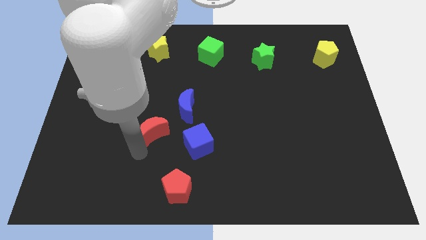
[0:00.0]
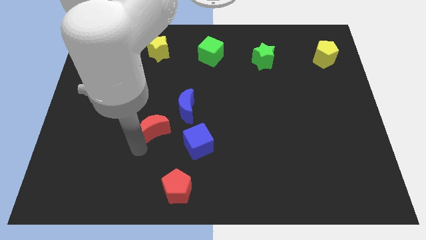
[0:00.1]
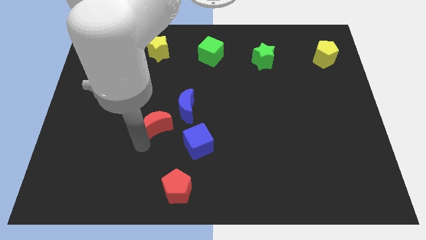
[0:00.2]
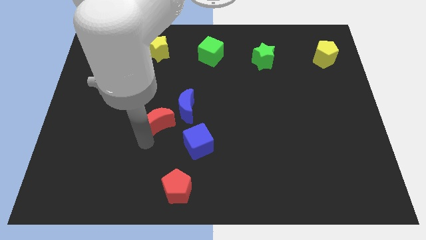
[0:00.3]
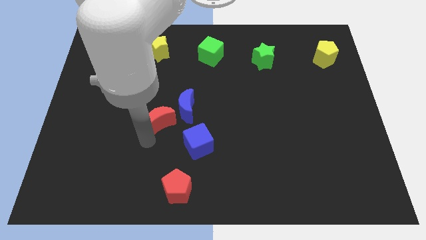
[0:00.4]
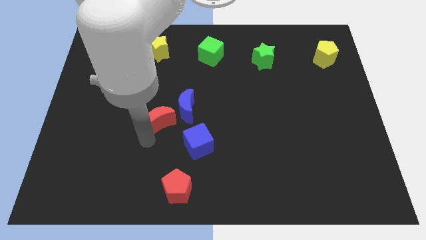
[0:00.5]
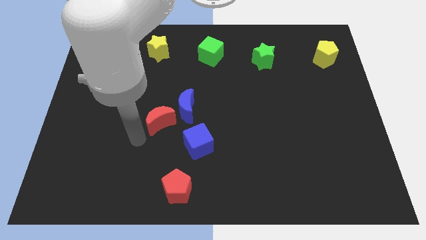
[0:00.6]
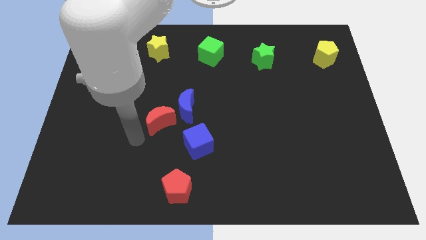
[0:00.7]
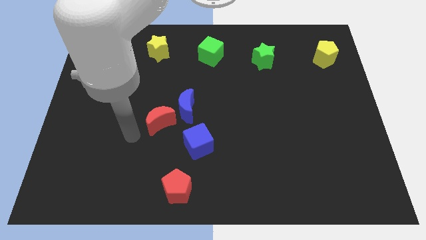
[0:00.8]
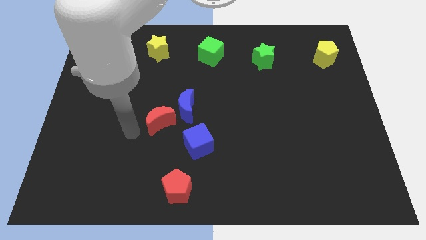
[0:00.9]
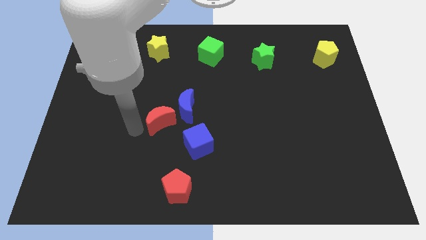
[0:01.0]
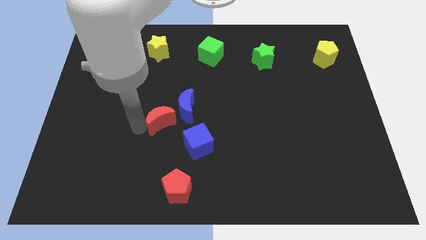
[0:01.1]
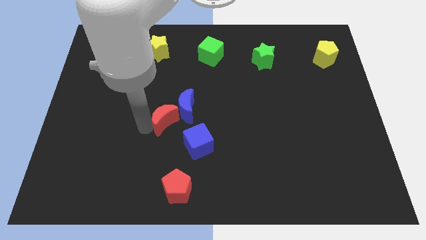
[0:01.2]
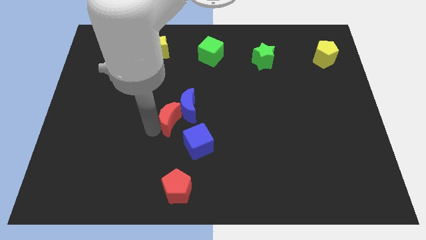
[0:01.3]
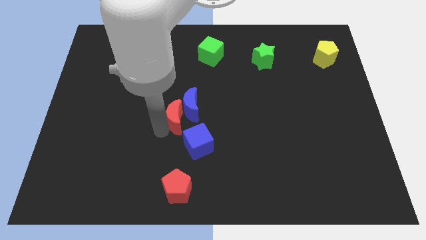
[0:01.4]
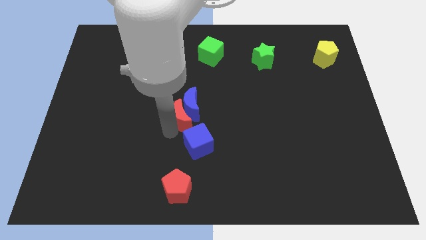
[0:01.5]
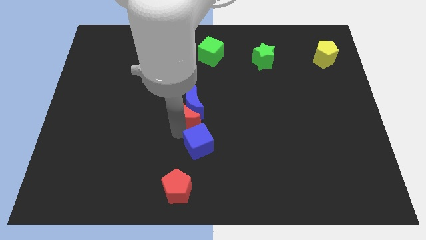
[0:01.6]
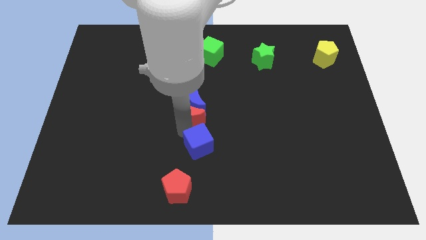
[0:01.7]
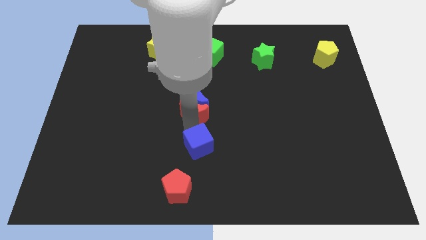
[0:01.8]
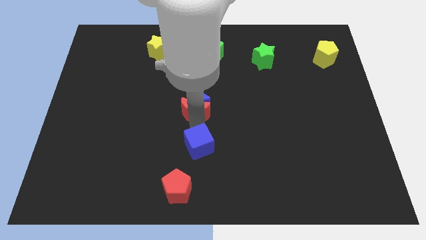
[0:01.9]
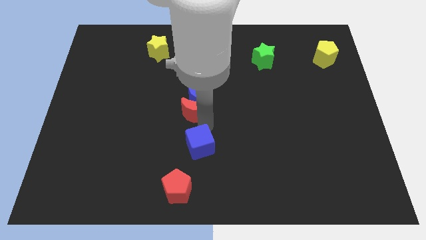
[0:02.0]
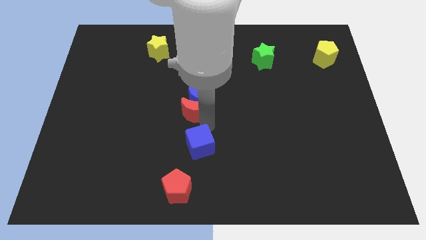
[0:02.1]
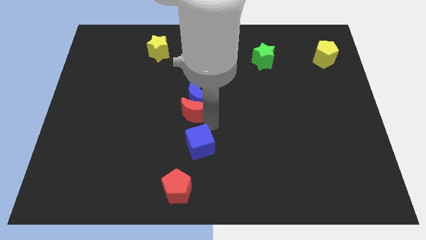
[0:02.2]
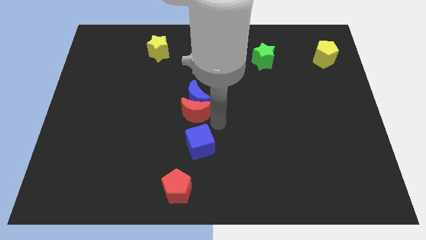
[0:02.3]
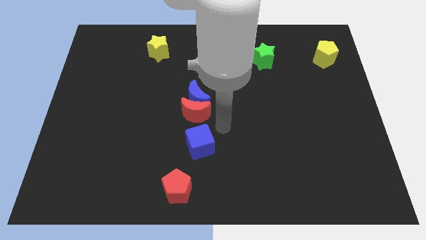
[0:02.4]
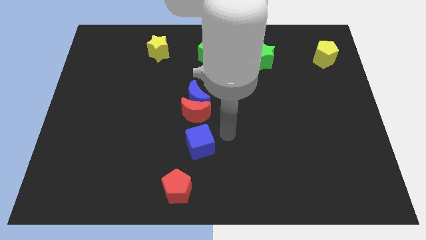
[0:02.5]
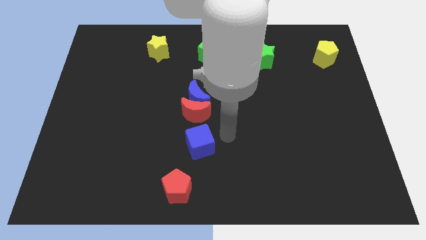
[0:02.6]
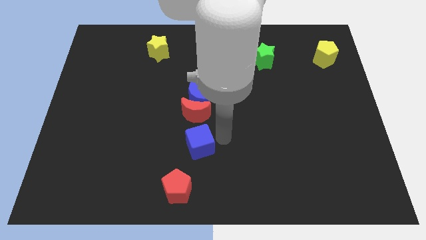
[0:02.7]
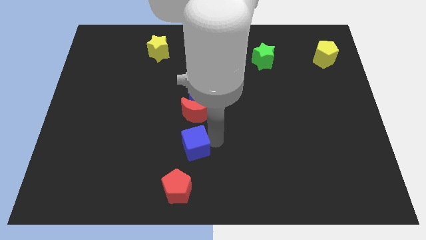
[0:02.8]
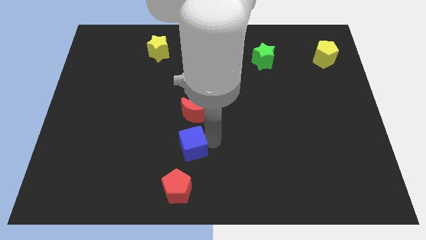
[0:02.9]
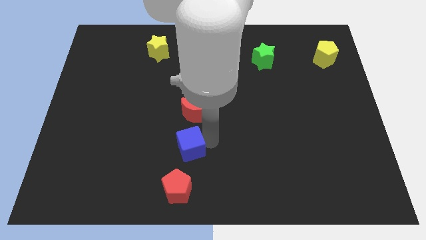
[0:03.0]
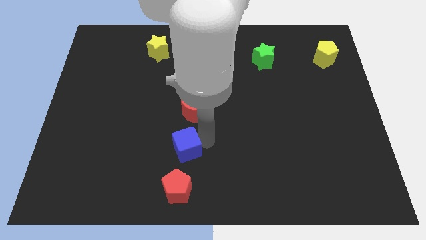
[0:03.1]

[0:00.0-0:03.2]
place red moon to the top of blue cube

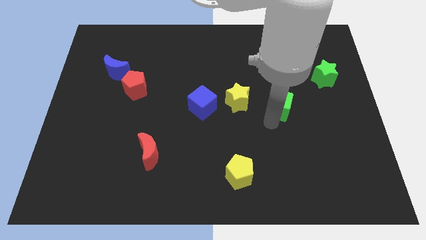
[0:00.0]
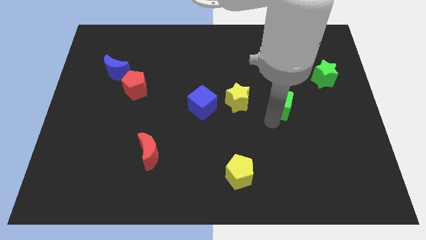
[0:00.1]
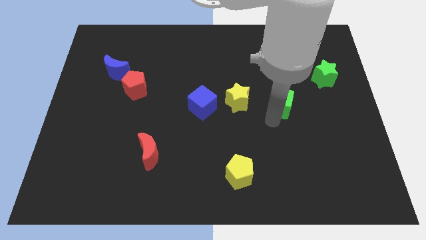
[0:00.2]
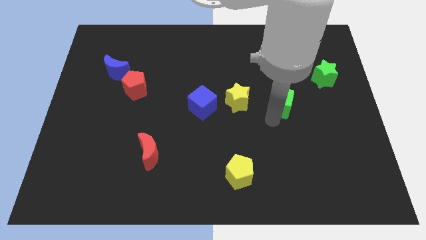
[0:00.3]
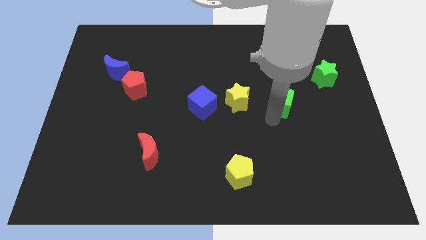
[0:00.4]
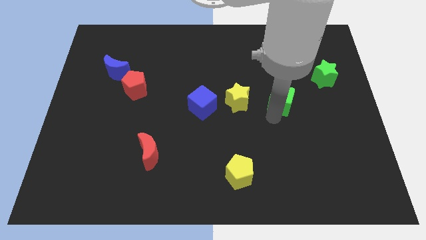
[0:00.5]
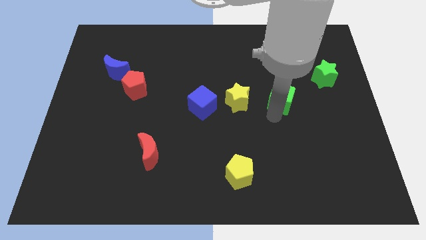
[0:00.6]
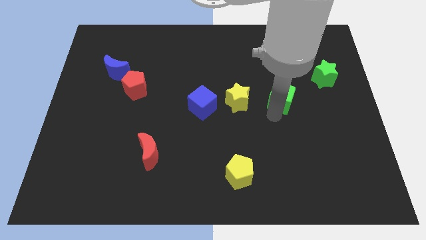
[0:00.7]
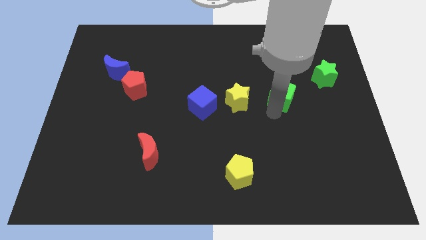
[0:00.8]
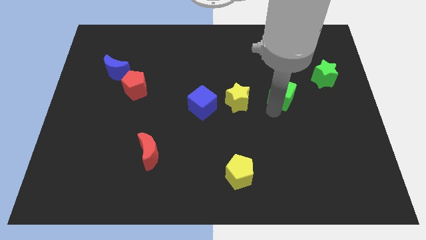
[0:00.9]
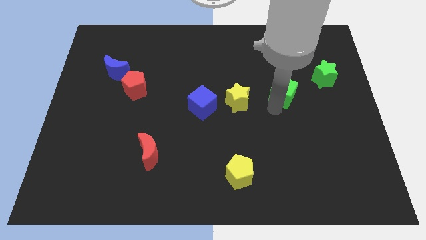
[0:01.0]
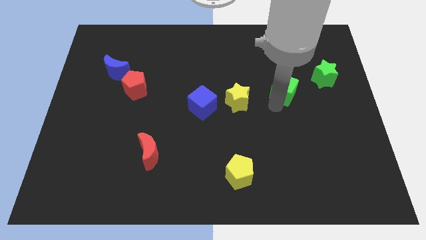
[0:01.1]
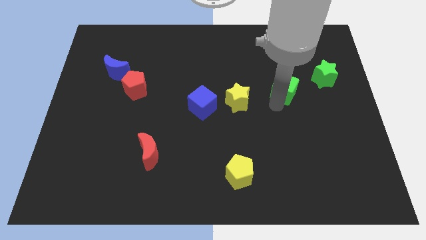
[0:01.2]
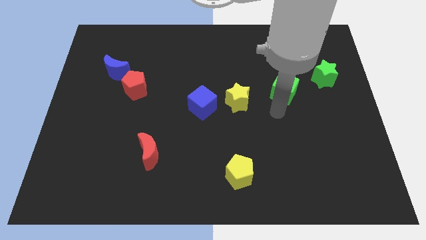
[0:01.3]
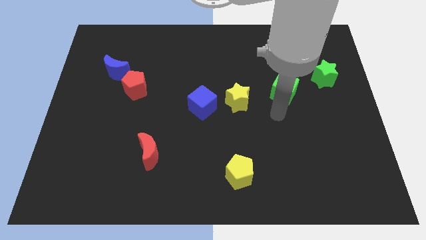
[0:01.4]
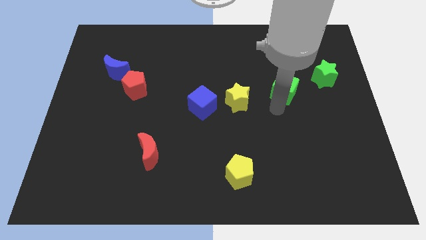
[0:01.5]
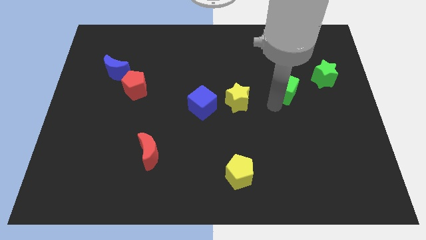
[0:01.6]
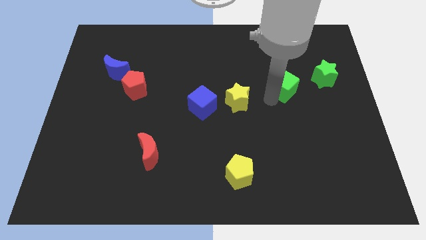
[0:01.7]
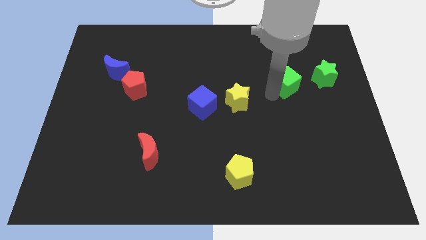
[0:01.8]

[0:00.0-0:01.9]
push the green cube towards the green star

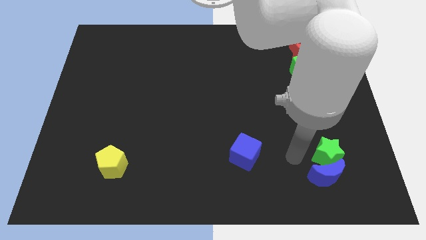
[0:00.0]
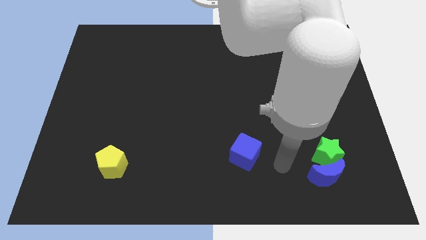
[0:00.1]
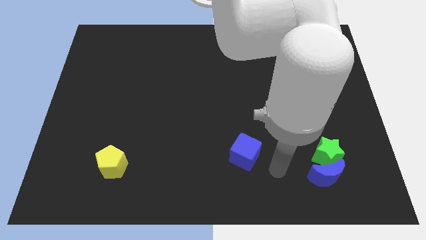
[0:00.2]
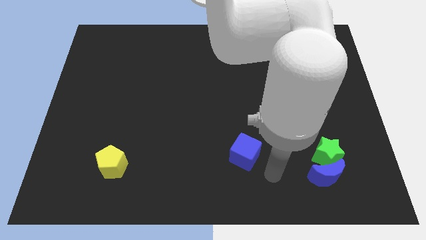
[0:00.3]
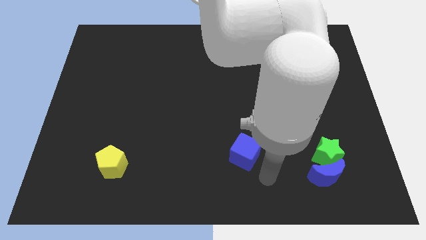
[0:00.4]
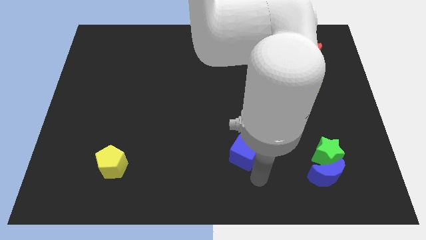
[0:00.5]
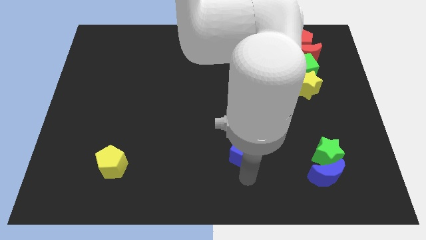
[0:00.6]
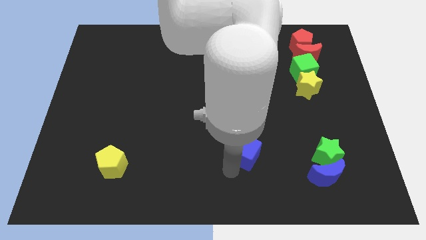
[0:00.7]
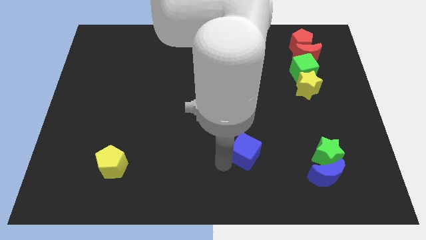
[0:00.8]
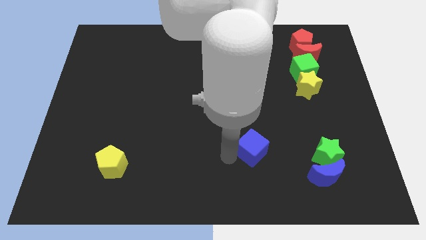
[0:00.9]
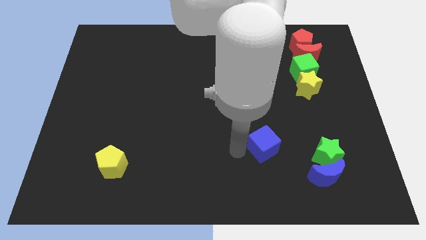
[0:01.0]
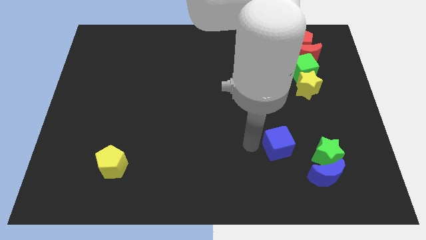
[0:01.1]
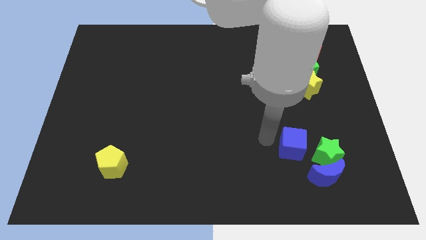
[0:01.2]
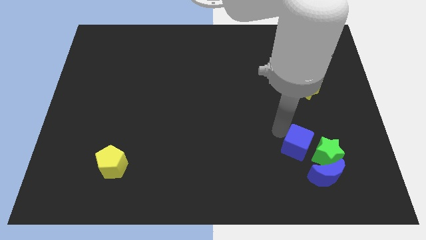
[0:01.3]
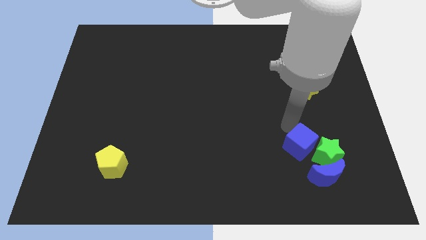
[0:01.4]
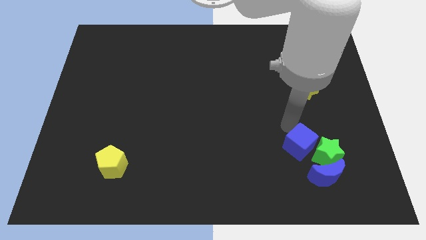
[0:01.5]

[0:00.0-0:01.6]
move the blue cube close to the green star

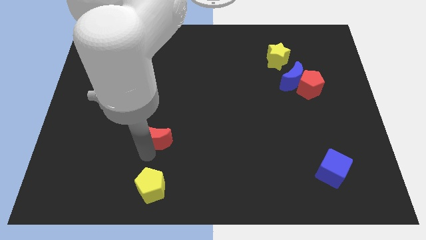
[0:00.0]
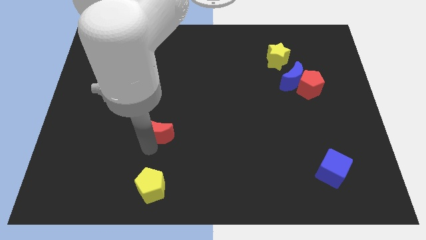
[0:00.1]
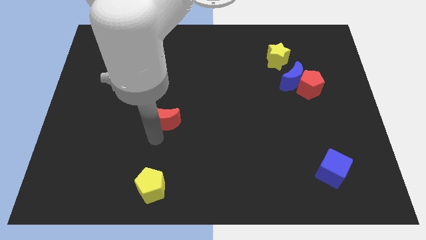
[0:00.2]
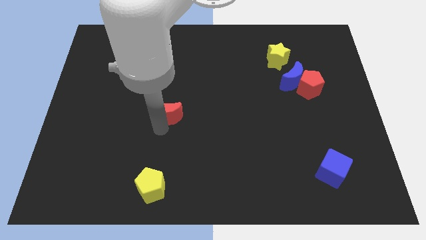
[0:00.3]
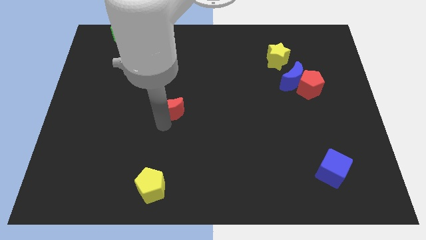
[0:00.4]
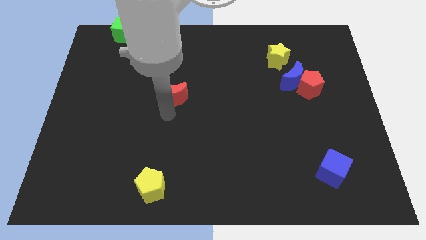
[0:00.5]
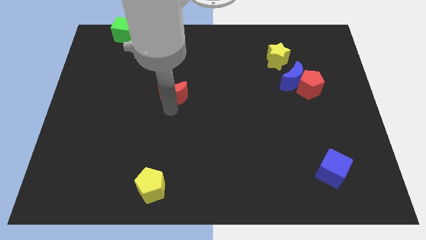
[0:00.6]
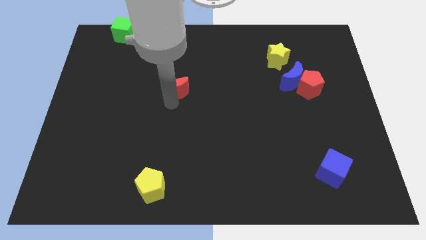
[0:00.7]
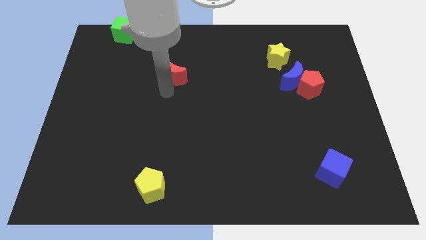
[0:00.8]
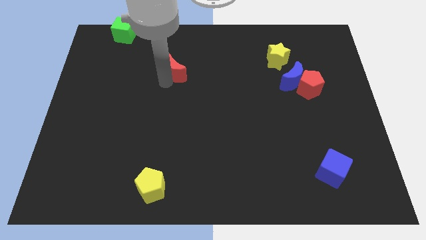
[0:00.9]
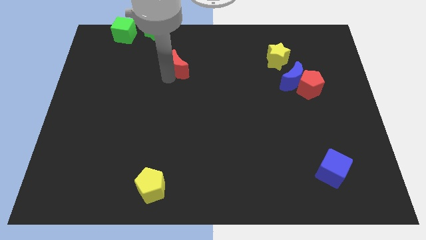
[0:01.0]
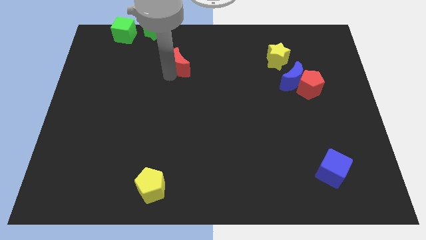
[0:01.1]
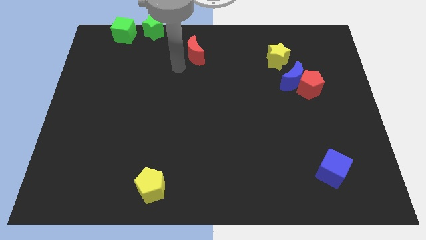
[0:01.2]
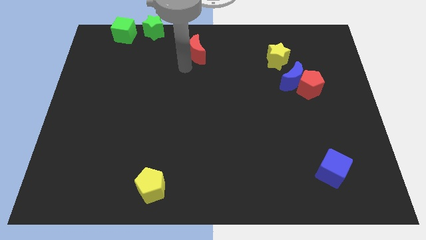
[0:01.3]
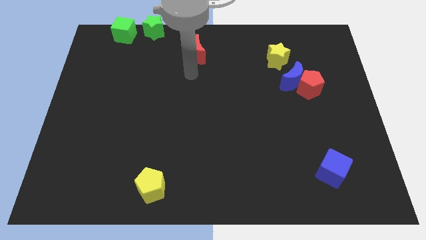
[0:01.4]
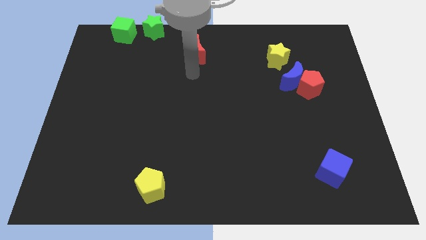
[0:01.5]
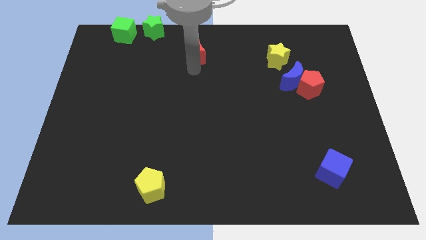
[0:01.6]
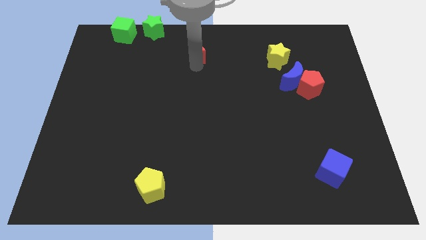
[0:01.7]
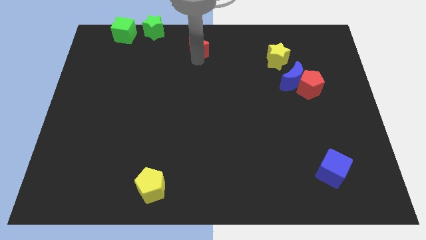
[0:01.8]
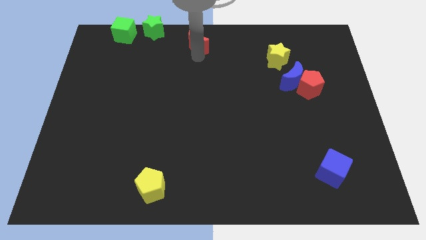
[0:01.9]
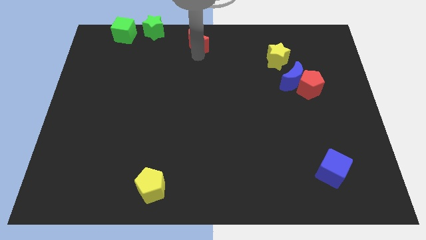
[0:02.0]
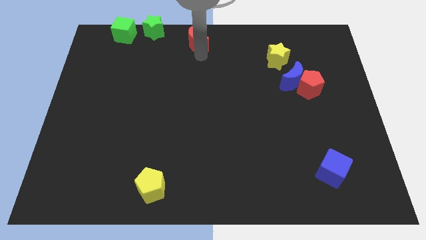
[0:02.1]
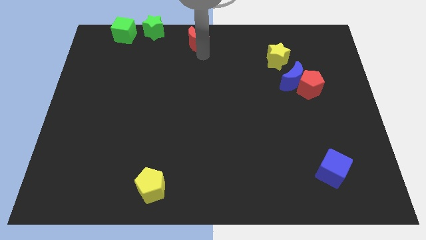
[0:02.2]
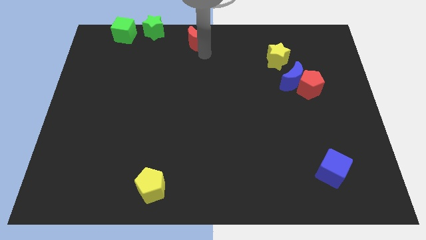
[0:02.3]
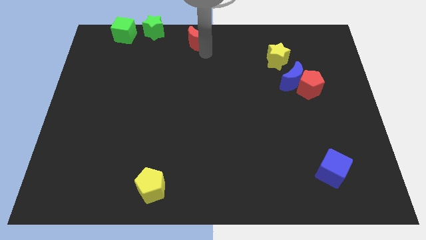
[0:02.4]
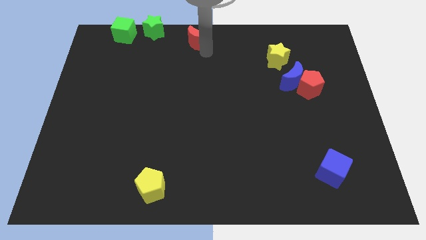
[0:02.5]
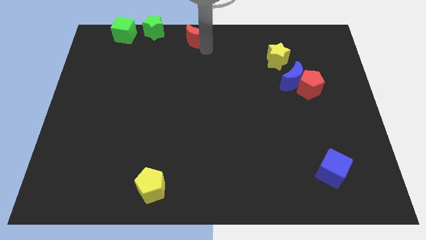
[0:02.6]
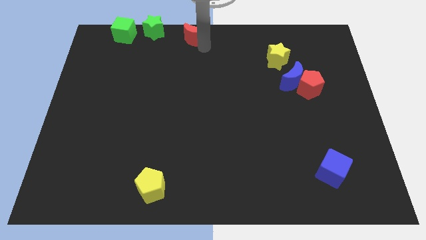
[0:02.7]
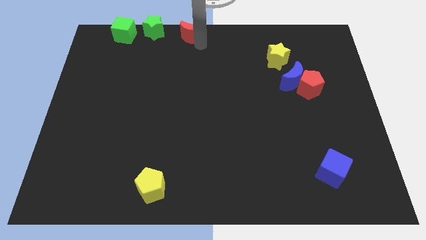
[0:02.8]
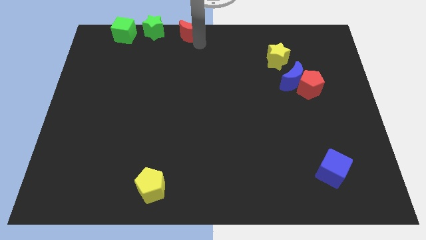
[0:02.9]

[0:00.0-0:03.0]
place the red crescent at top center of the board
